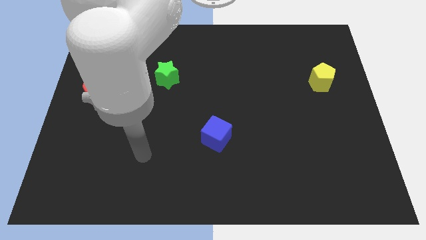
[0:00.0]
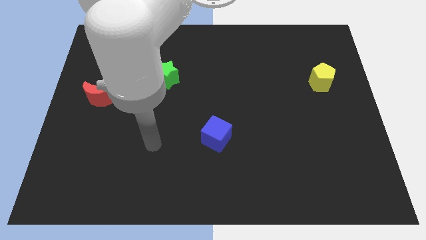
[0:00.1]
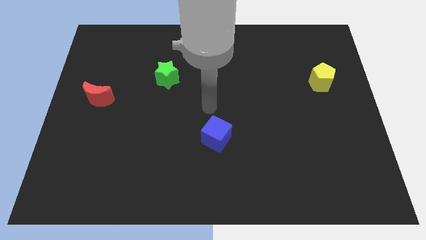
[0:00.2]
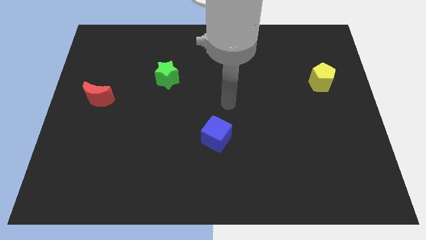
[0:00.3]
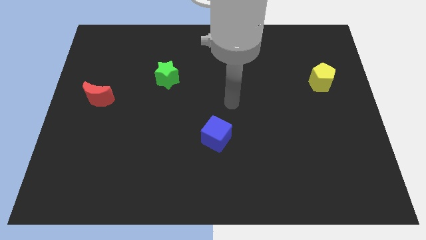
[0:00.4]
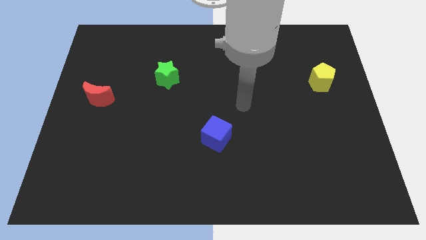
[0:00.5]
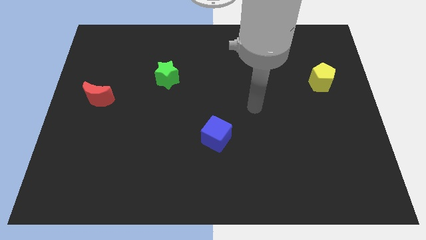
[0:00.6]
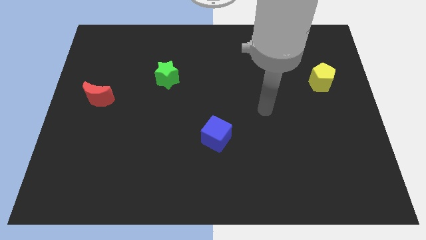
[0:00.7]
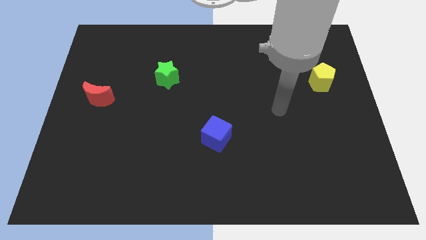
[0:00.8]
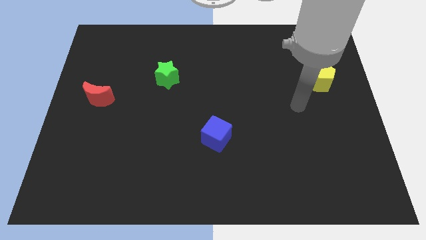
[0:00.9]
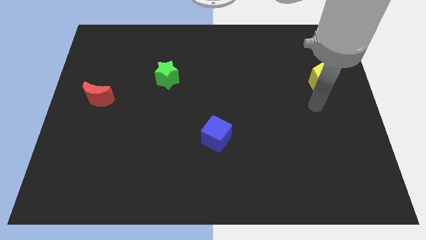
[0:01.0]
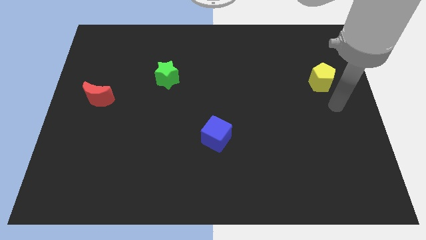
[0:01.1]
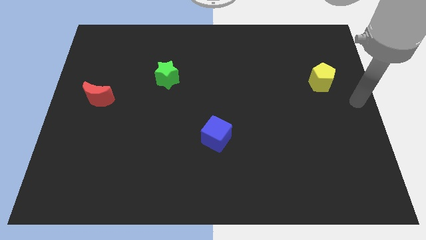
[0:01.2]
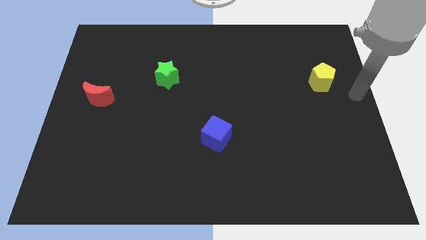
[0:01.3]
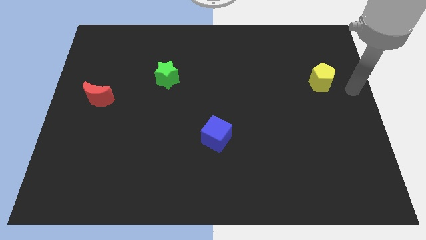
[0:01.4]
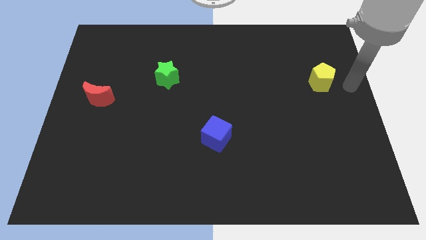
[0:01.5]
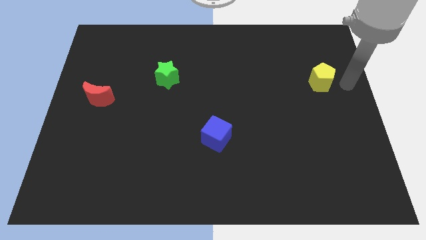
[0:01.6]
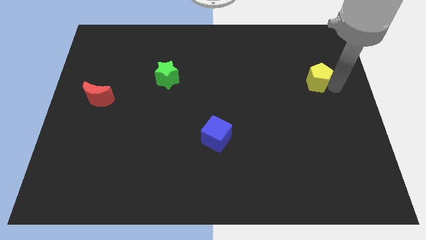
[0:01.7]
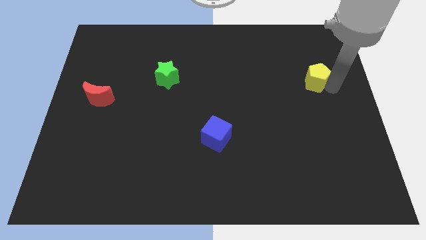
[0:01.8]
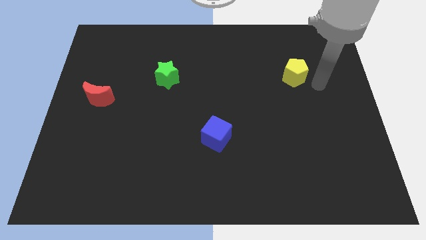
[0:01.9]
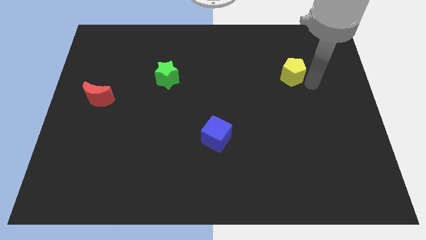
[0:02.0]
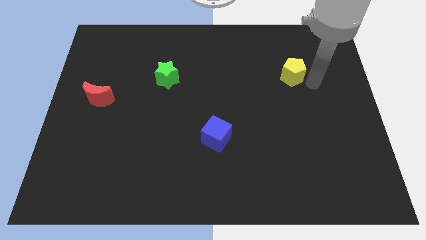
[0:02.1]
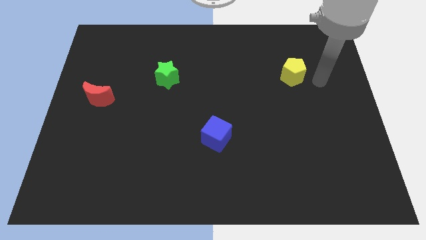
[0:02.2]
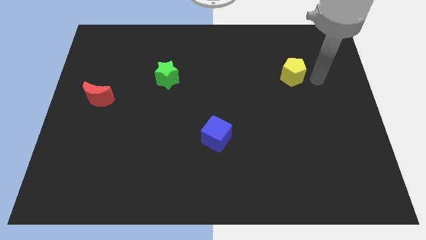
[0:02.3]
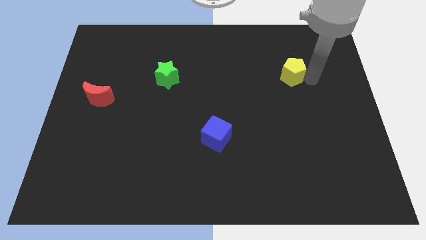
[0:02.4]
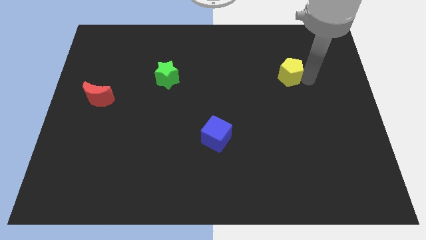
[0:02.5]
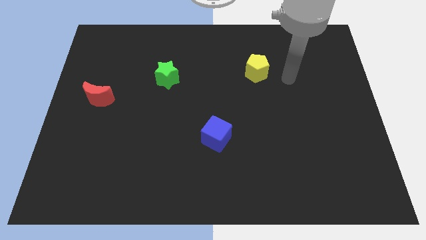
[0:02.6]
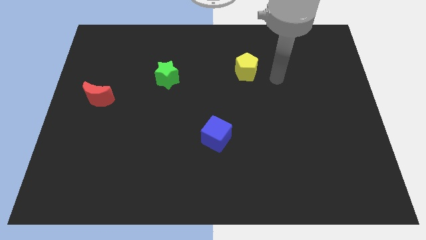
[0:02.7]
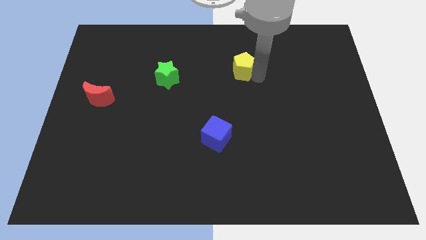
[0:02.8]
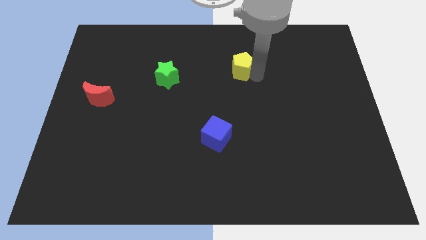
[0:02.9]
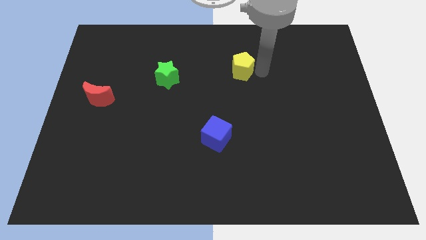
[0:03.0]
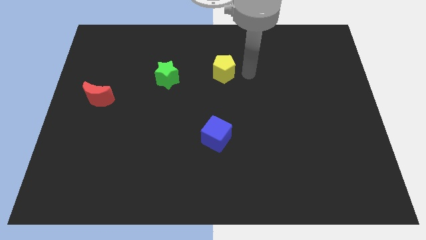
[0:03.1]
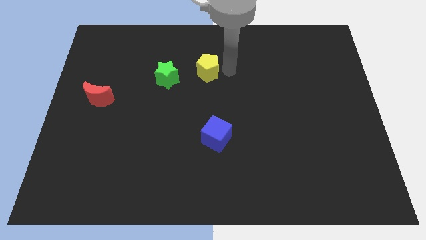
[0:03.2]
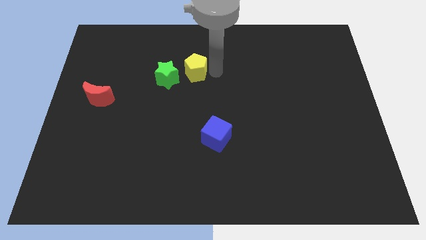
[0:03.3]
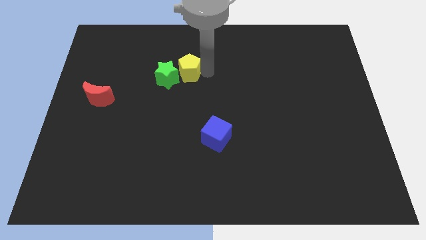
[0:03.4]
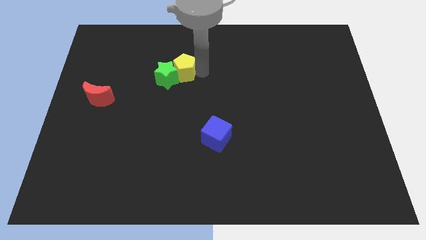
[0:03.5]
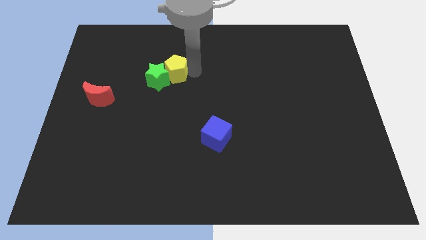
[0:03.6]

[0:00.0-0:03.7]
slide the pentagon close to the green block

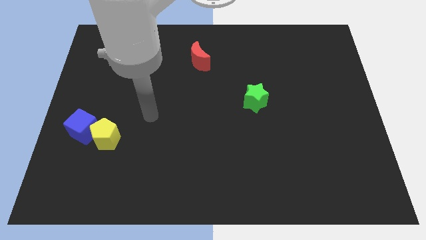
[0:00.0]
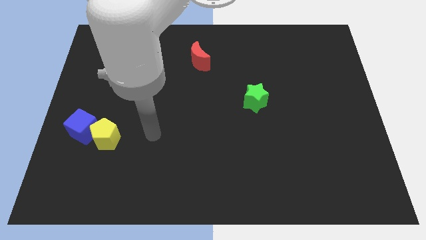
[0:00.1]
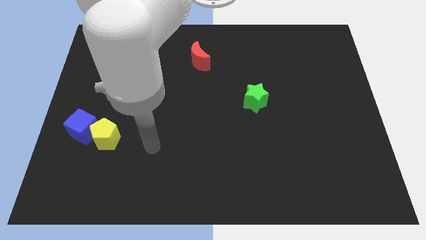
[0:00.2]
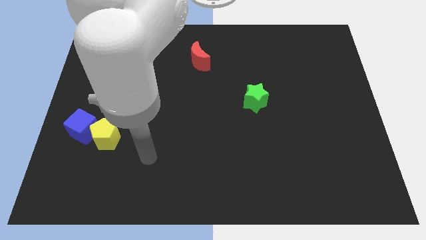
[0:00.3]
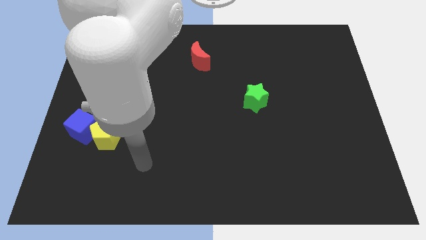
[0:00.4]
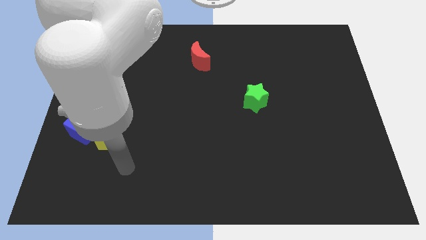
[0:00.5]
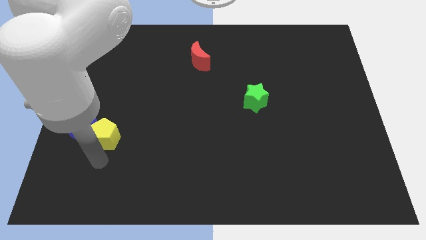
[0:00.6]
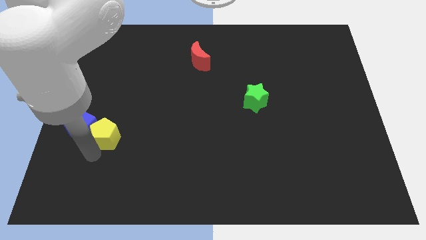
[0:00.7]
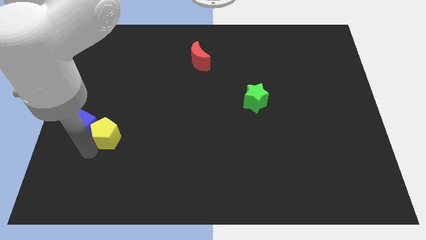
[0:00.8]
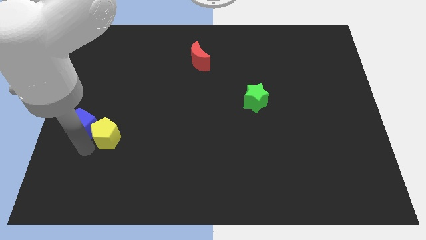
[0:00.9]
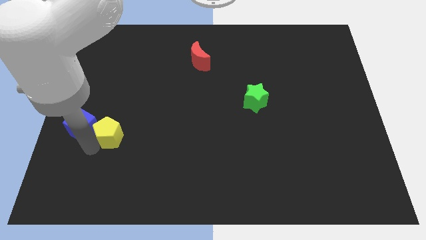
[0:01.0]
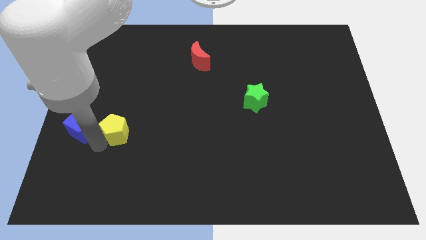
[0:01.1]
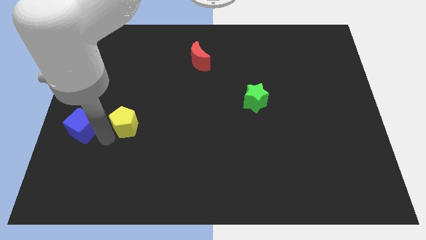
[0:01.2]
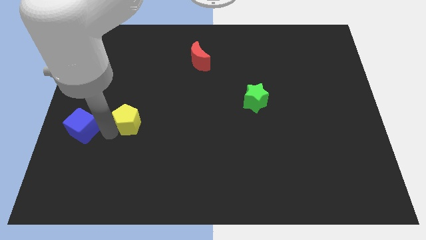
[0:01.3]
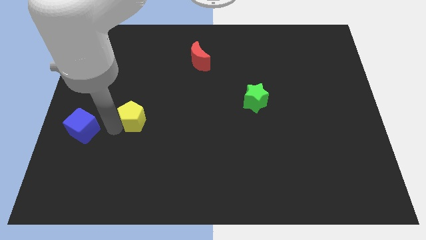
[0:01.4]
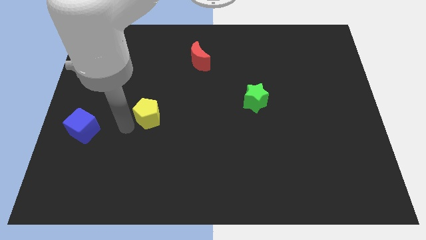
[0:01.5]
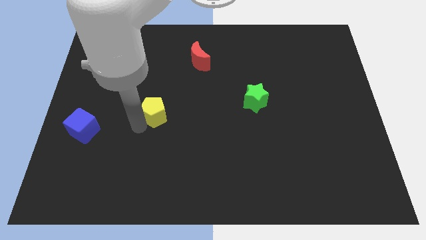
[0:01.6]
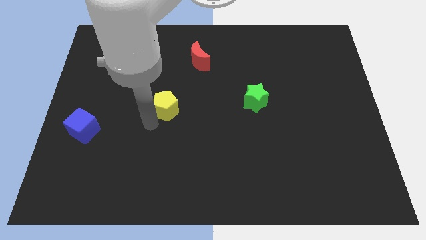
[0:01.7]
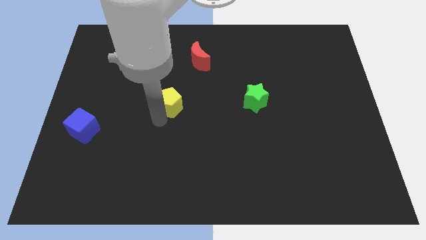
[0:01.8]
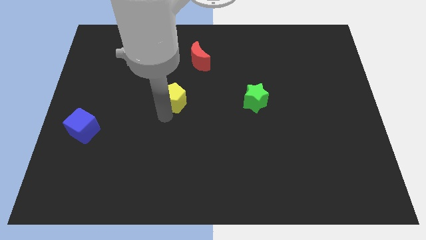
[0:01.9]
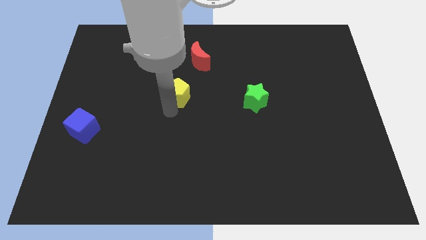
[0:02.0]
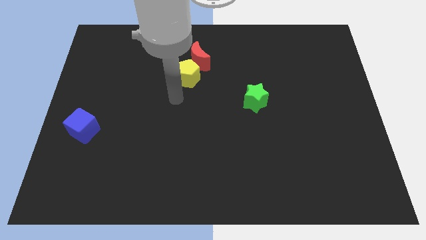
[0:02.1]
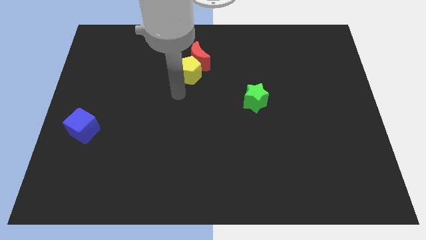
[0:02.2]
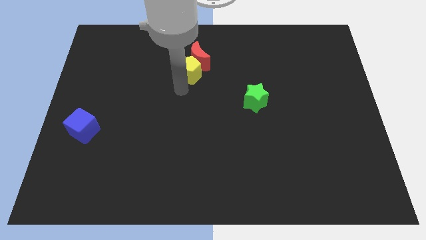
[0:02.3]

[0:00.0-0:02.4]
put the pentagon next to the red block

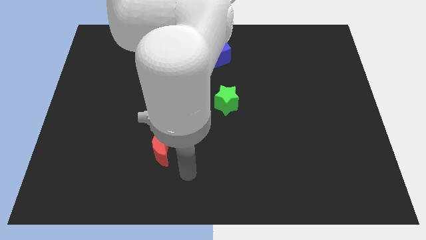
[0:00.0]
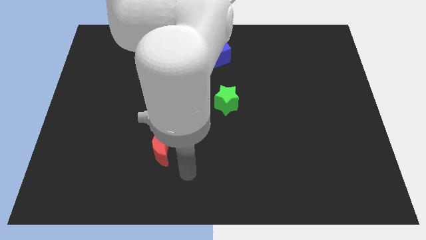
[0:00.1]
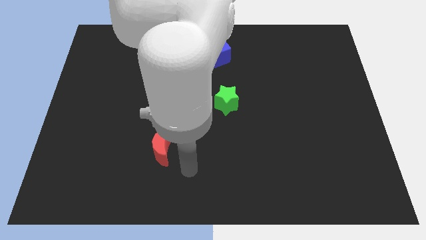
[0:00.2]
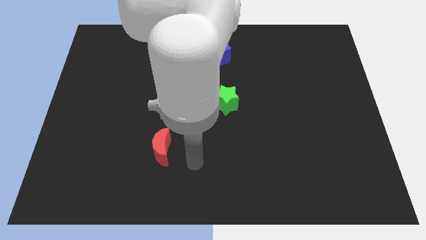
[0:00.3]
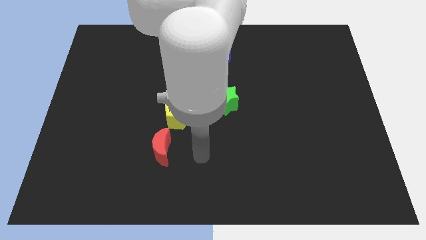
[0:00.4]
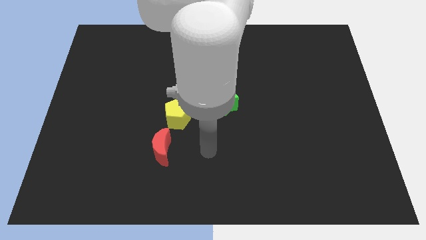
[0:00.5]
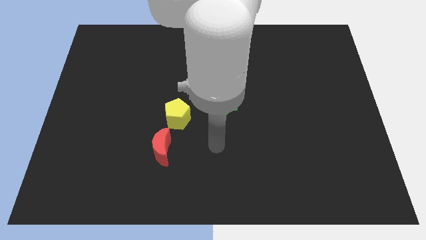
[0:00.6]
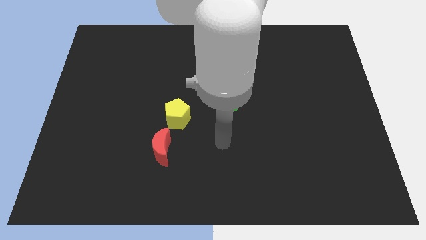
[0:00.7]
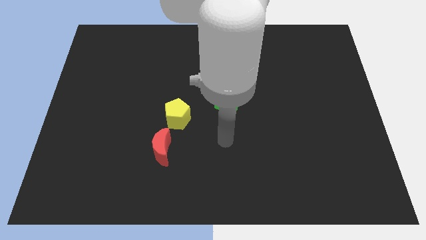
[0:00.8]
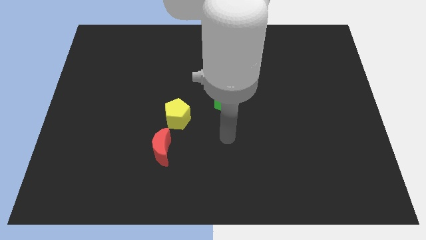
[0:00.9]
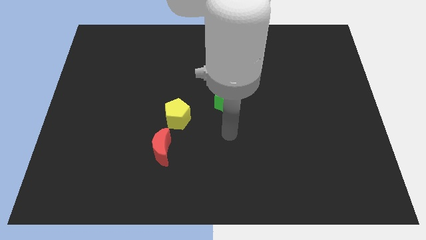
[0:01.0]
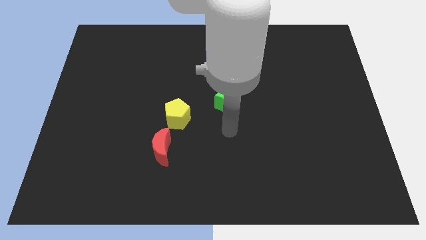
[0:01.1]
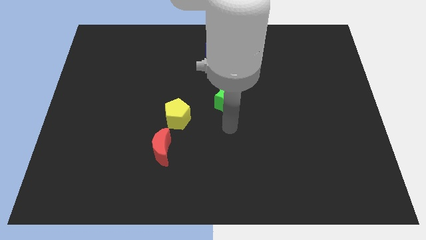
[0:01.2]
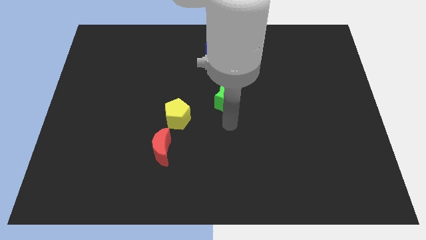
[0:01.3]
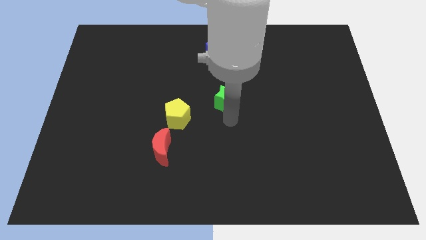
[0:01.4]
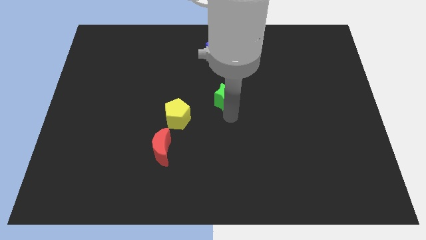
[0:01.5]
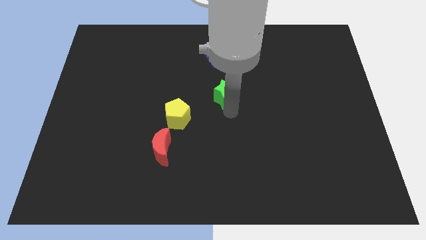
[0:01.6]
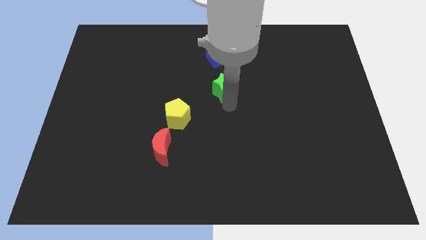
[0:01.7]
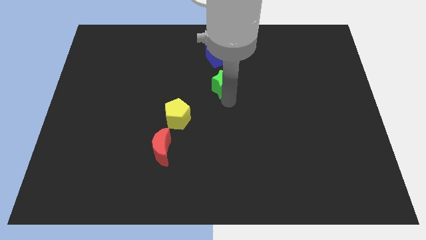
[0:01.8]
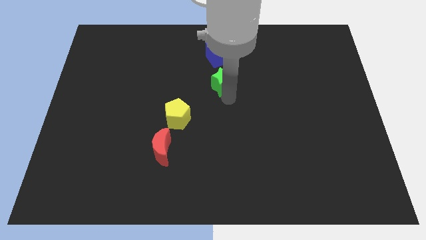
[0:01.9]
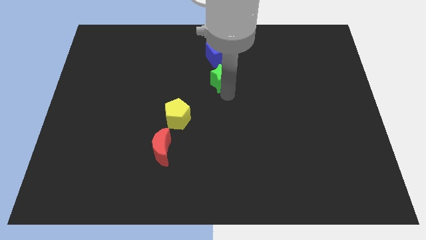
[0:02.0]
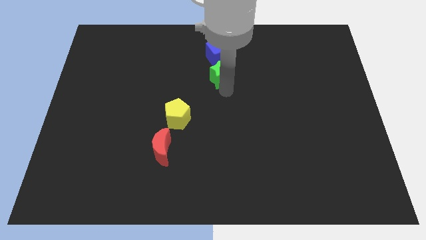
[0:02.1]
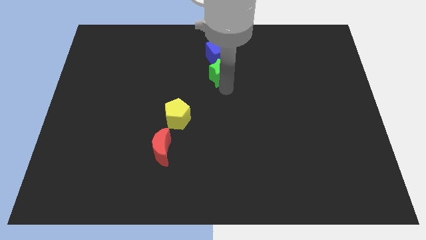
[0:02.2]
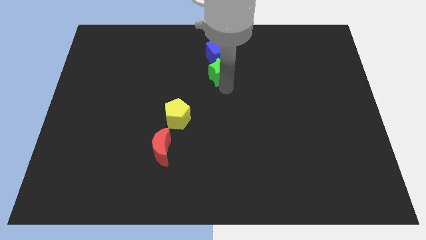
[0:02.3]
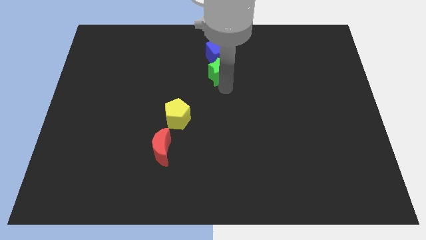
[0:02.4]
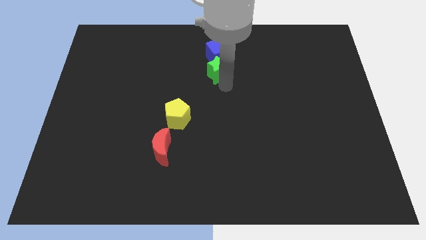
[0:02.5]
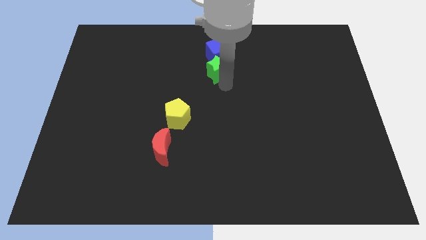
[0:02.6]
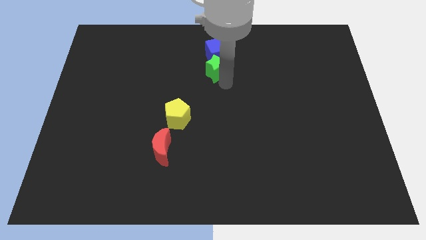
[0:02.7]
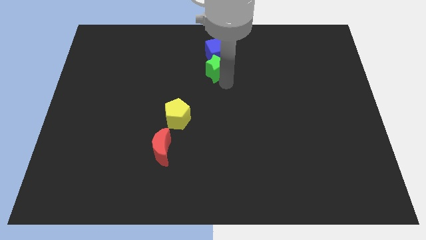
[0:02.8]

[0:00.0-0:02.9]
slide the star close to the cube
